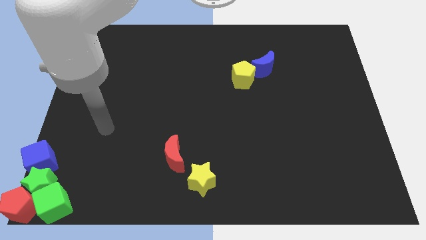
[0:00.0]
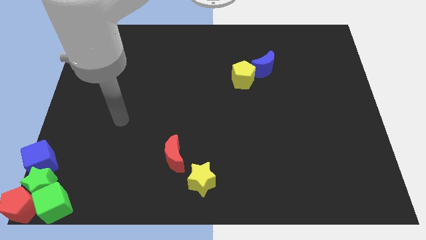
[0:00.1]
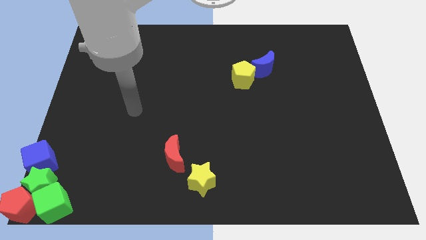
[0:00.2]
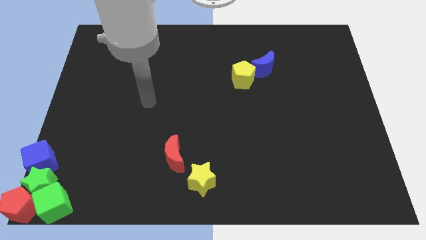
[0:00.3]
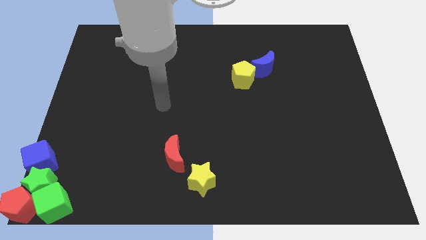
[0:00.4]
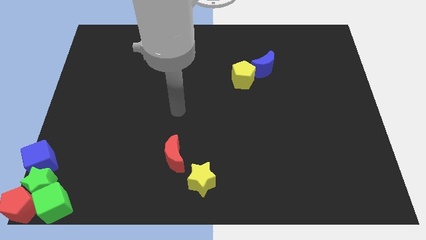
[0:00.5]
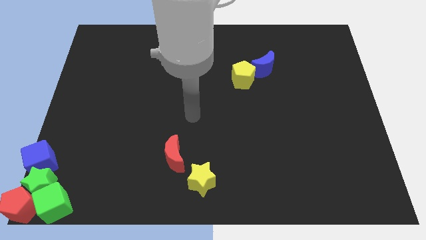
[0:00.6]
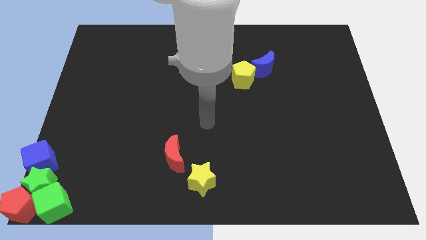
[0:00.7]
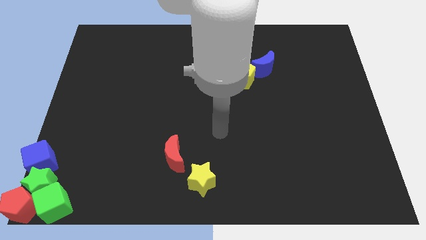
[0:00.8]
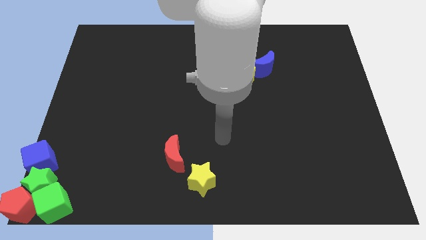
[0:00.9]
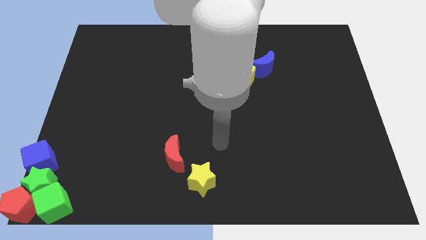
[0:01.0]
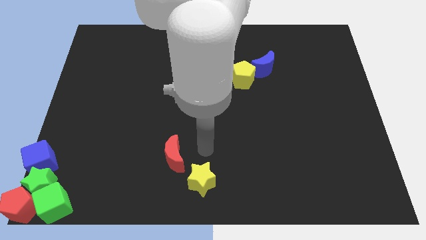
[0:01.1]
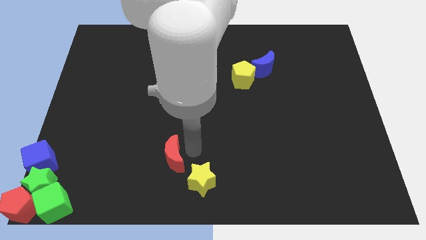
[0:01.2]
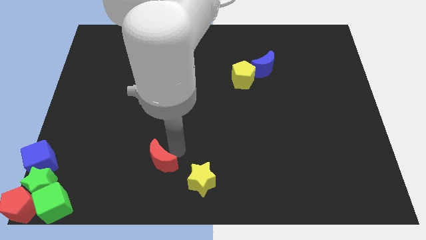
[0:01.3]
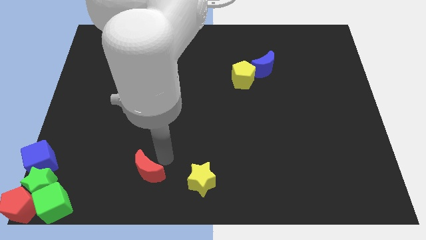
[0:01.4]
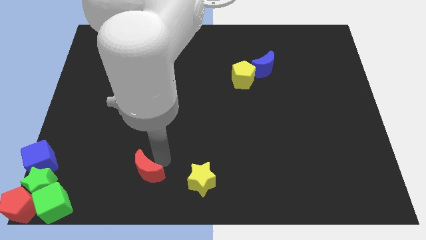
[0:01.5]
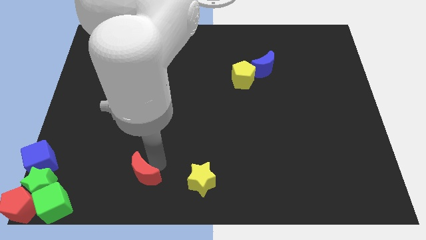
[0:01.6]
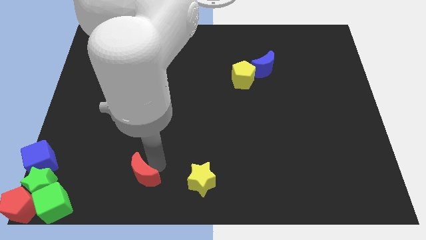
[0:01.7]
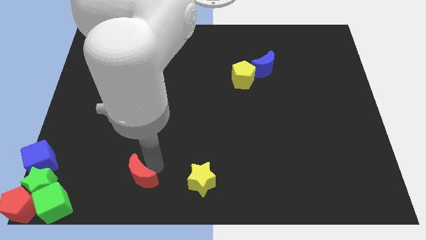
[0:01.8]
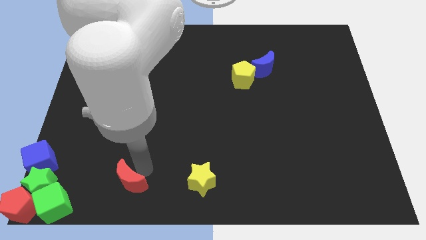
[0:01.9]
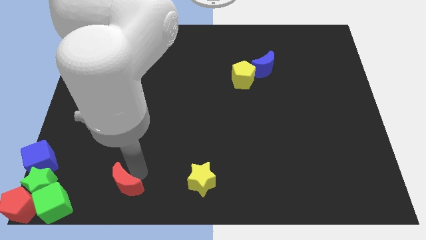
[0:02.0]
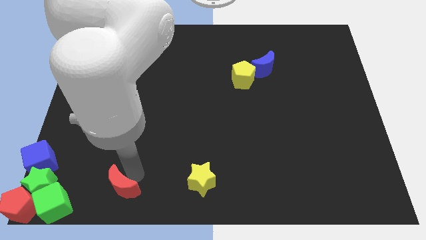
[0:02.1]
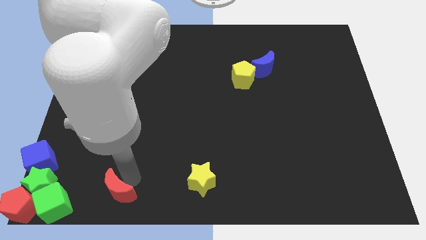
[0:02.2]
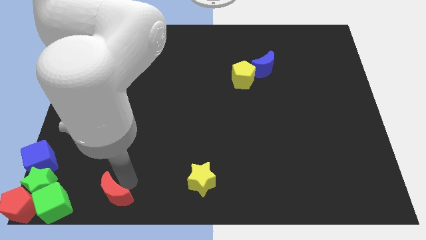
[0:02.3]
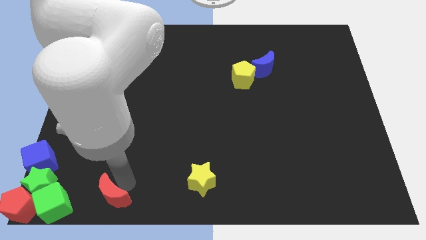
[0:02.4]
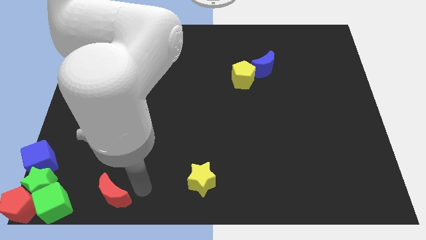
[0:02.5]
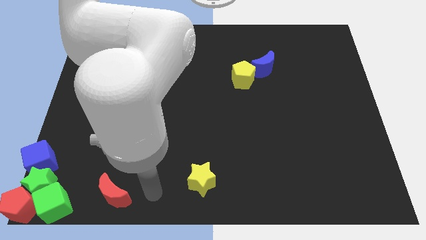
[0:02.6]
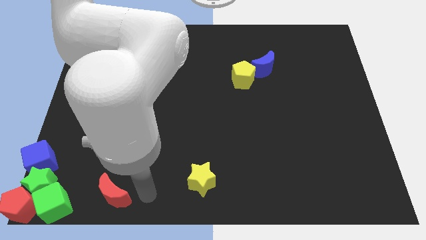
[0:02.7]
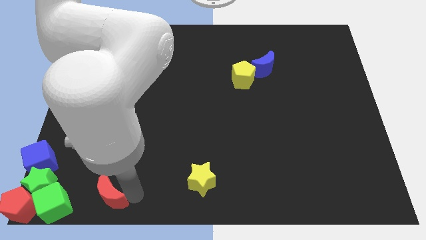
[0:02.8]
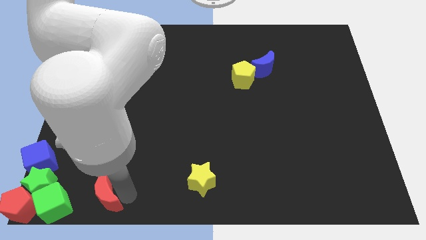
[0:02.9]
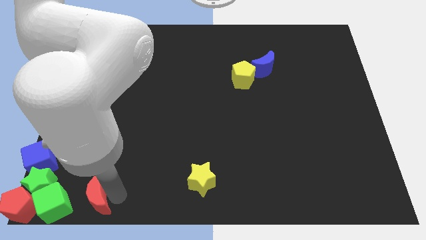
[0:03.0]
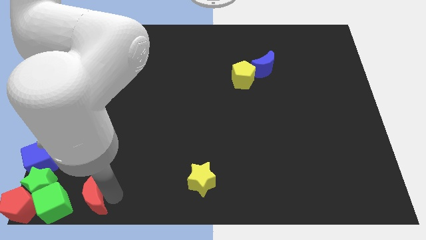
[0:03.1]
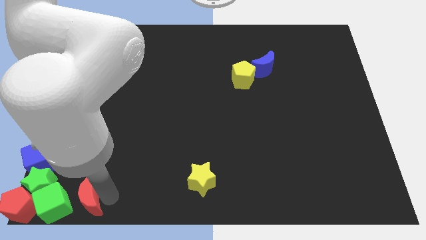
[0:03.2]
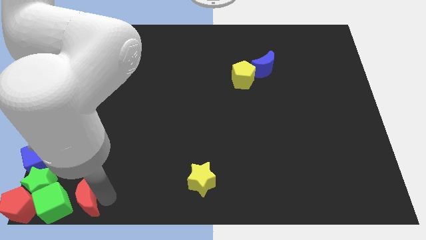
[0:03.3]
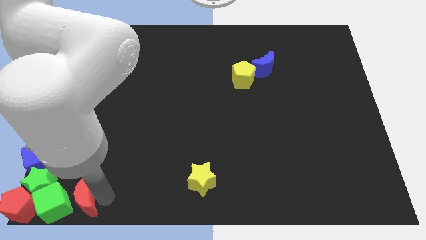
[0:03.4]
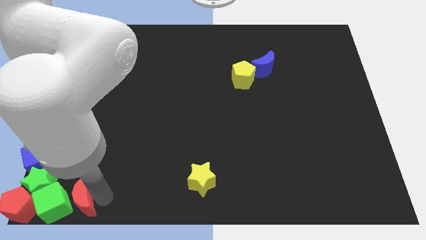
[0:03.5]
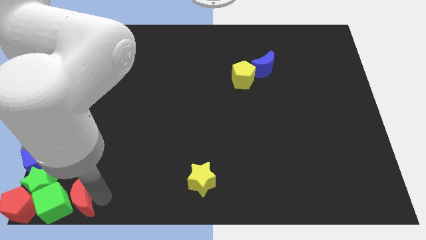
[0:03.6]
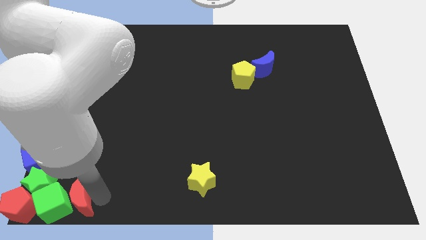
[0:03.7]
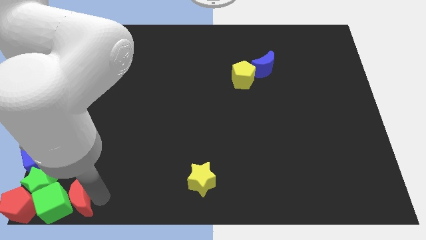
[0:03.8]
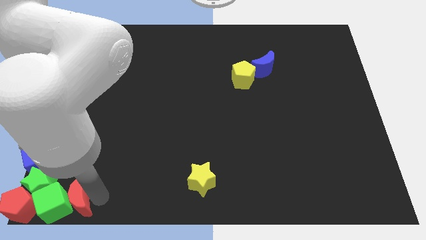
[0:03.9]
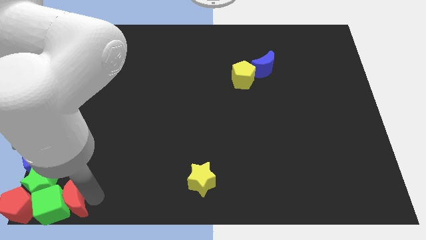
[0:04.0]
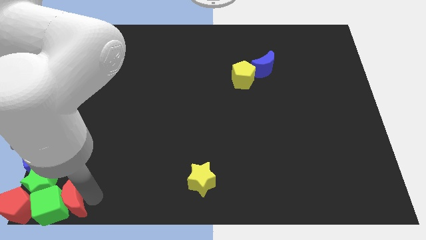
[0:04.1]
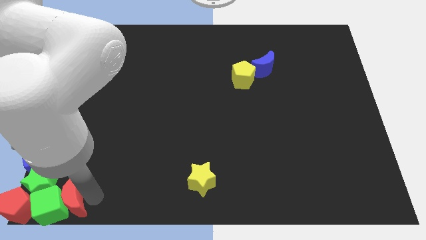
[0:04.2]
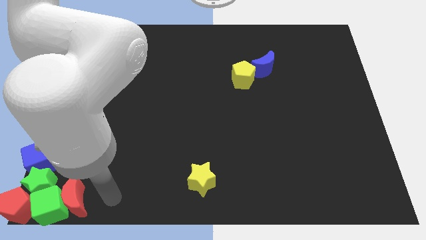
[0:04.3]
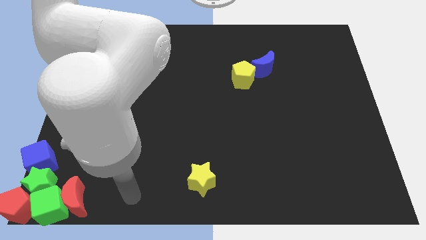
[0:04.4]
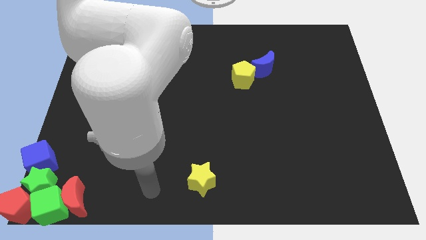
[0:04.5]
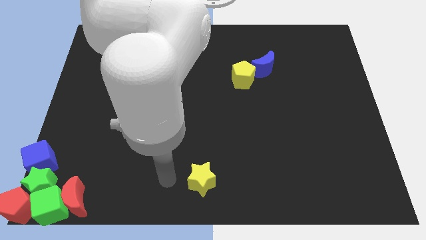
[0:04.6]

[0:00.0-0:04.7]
push the red crescent to the right of the green cube

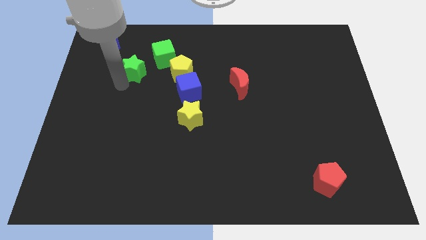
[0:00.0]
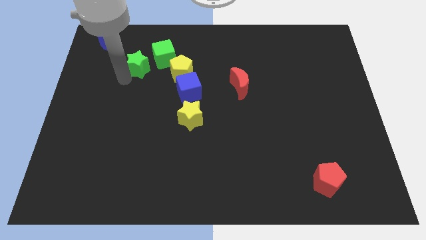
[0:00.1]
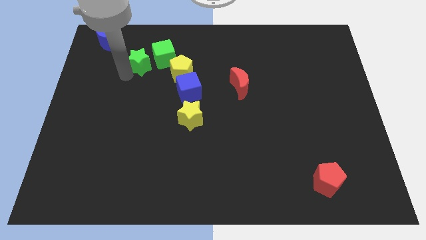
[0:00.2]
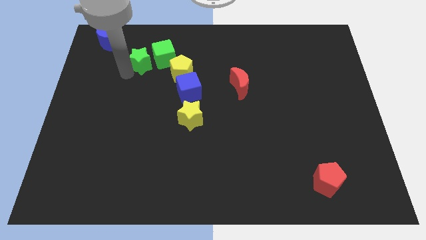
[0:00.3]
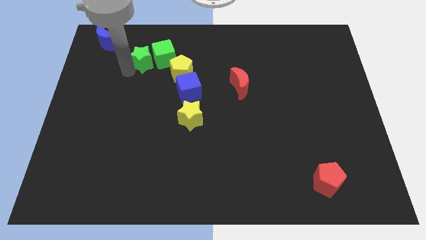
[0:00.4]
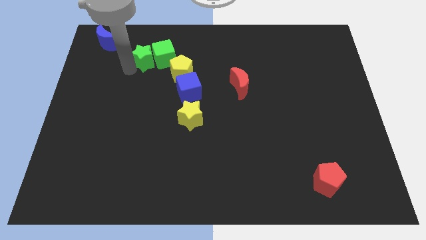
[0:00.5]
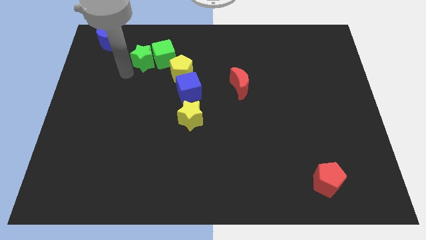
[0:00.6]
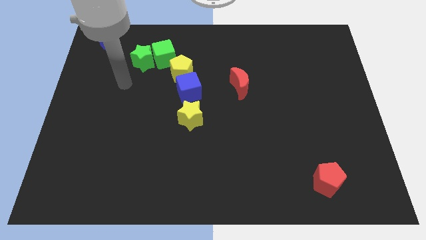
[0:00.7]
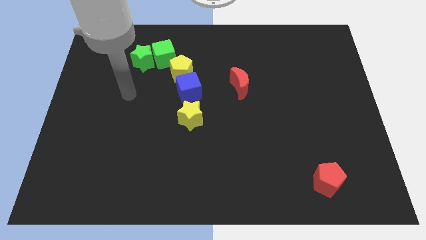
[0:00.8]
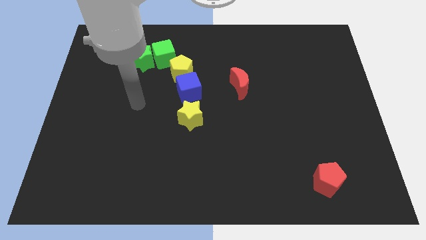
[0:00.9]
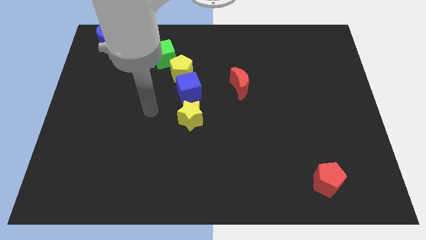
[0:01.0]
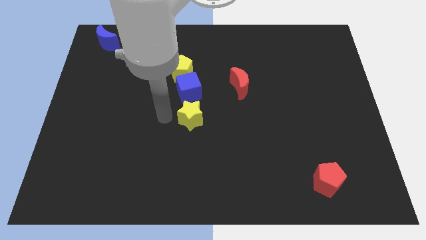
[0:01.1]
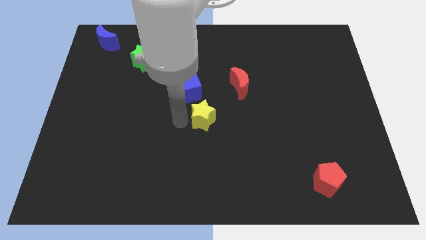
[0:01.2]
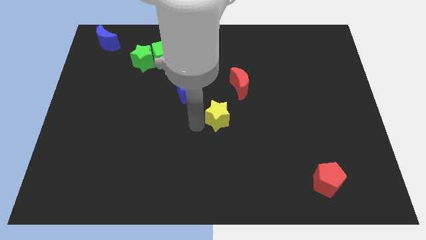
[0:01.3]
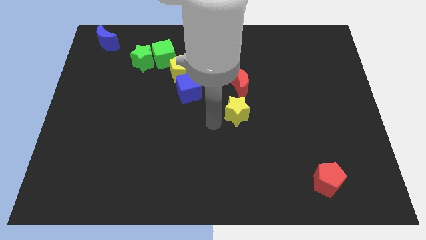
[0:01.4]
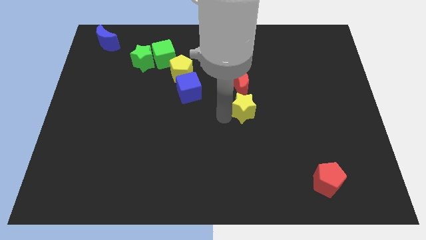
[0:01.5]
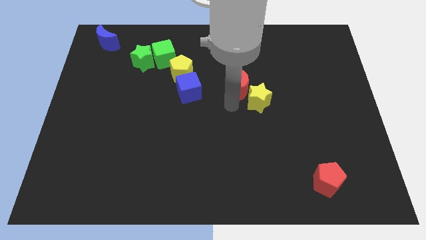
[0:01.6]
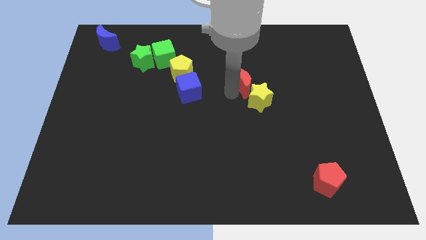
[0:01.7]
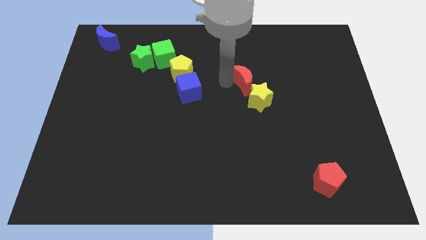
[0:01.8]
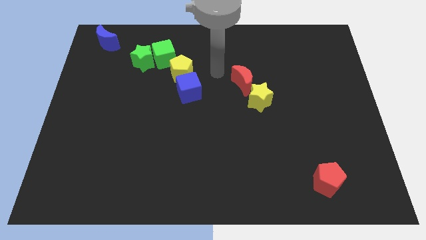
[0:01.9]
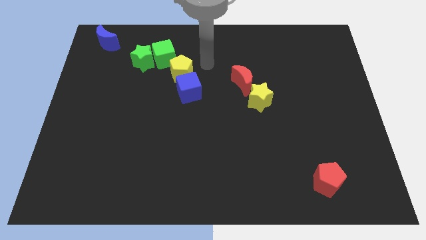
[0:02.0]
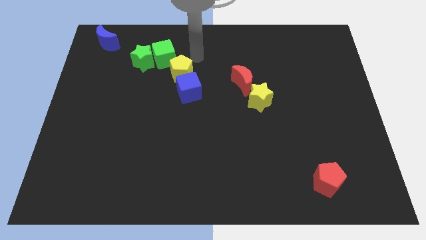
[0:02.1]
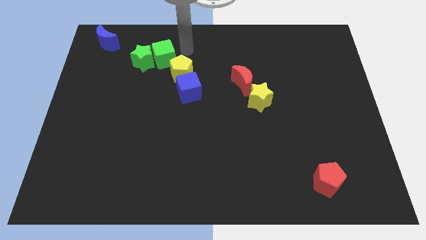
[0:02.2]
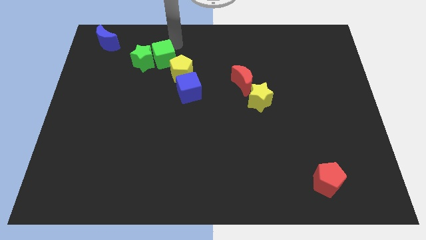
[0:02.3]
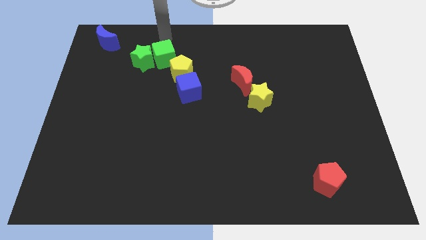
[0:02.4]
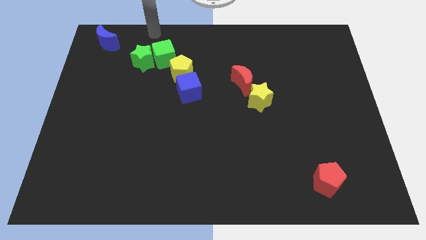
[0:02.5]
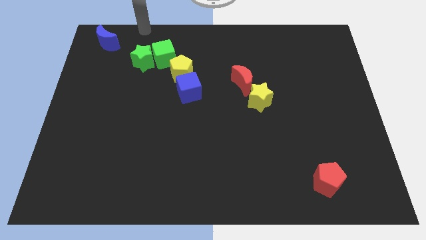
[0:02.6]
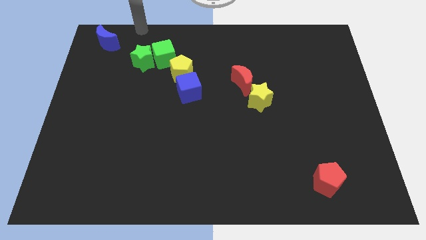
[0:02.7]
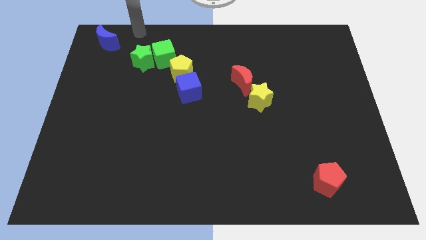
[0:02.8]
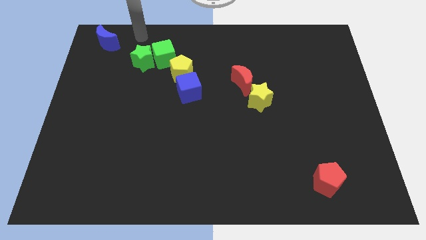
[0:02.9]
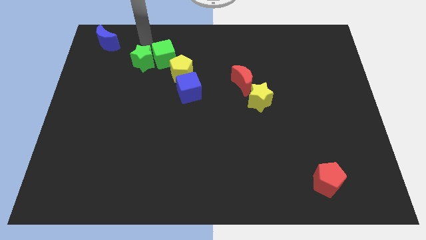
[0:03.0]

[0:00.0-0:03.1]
place yellow star at the bottom of red moon

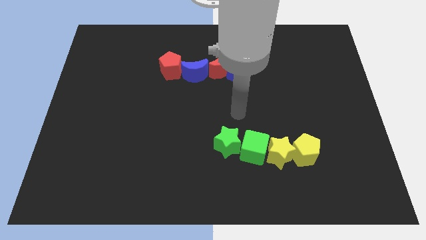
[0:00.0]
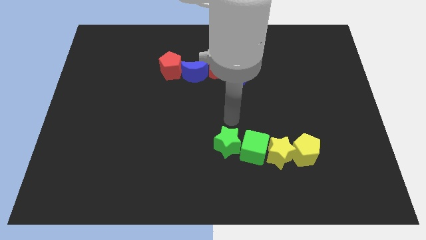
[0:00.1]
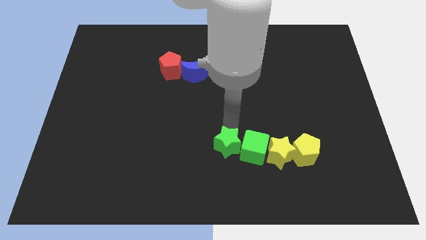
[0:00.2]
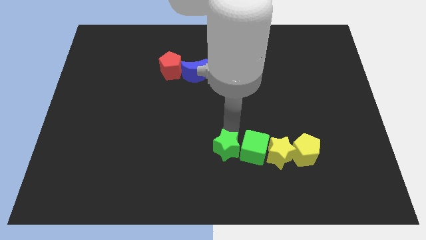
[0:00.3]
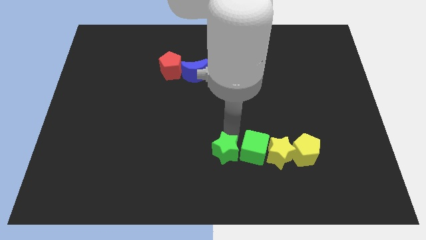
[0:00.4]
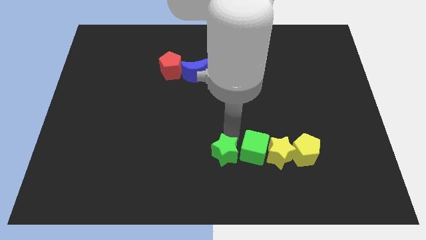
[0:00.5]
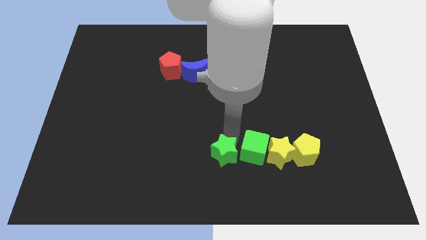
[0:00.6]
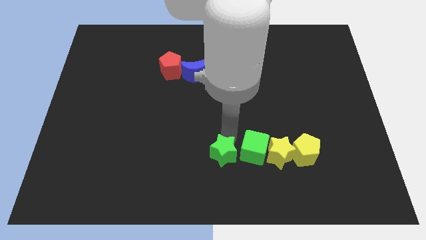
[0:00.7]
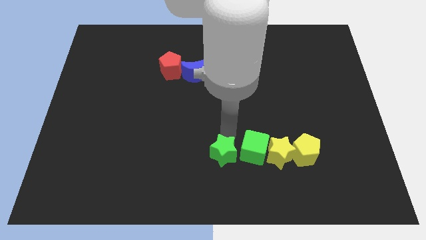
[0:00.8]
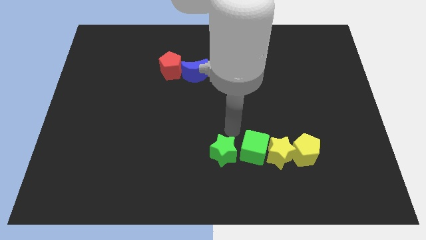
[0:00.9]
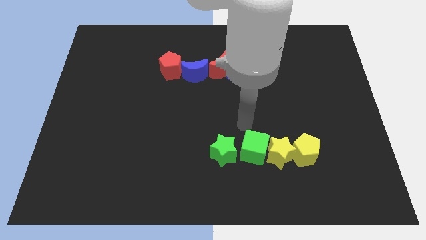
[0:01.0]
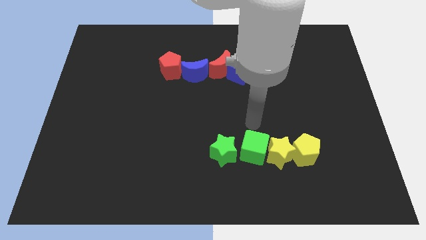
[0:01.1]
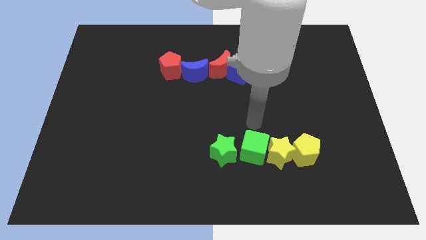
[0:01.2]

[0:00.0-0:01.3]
slightly push the green star towards the bottom center of the board
